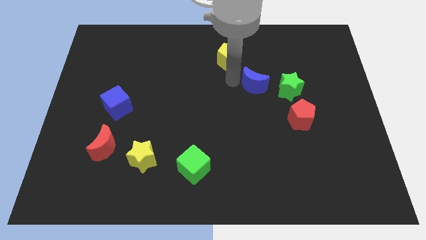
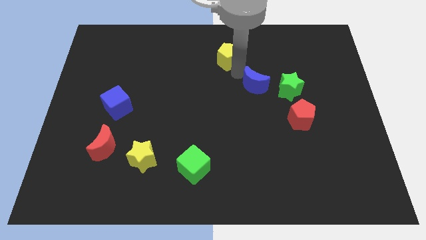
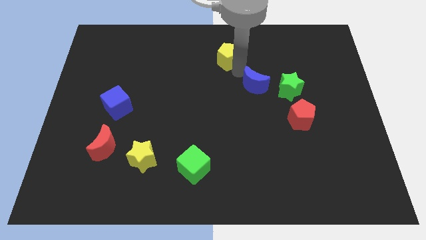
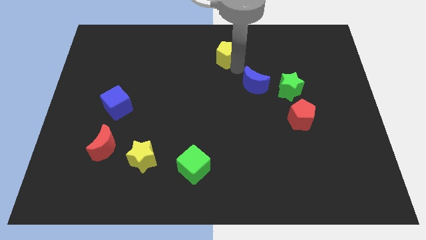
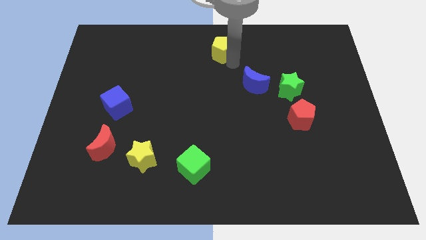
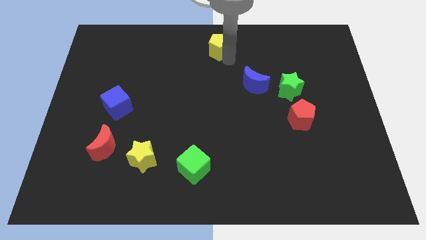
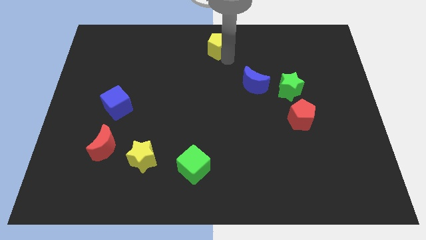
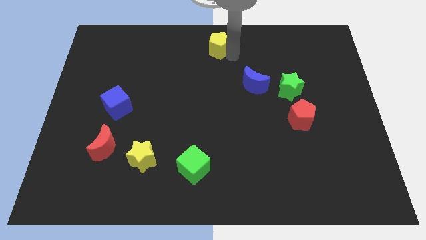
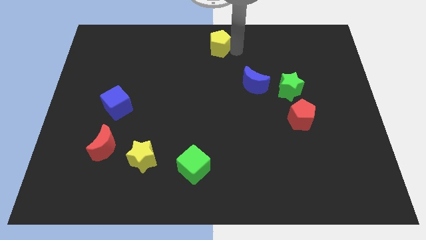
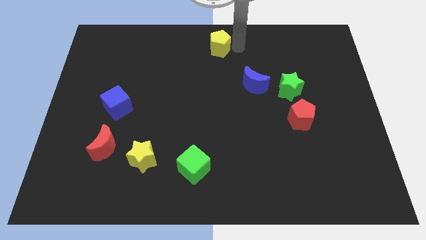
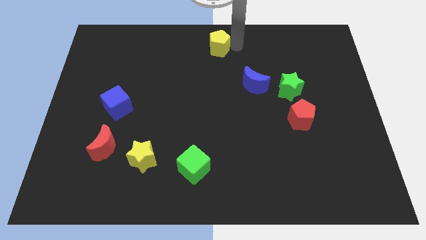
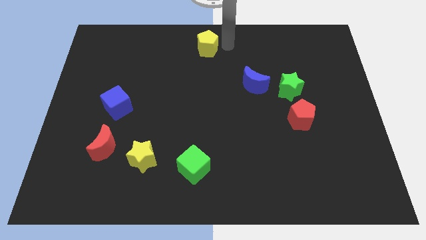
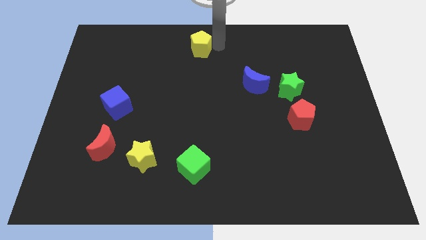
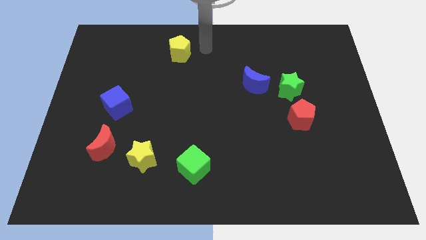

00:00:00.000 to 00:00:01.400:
move the yellow pentagon to the left of the board

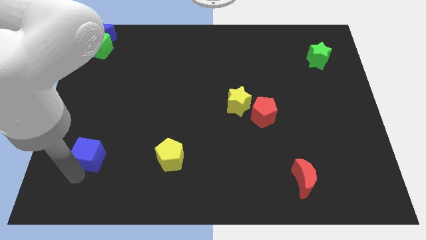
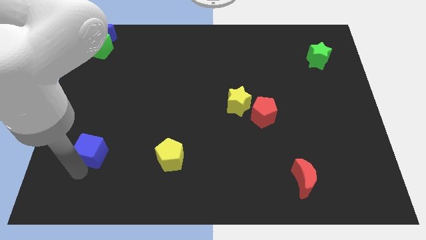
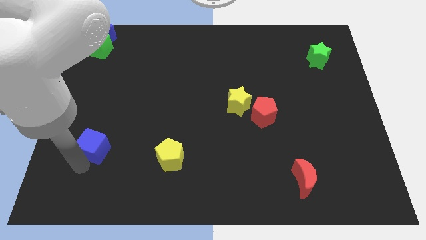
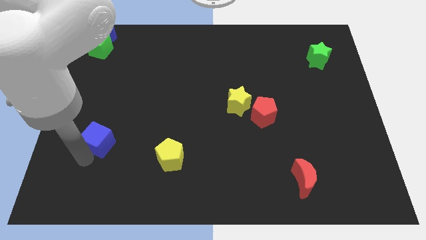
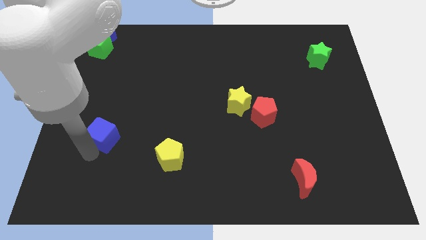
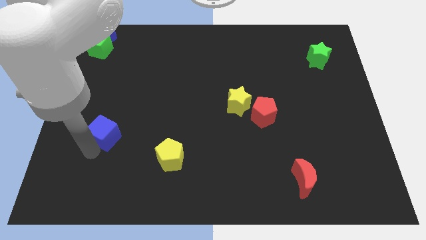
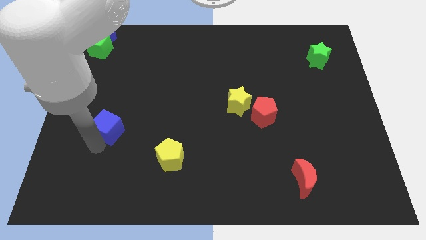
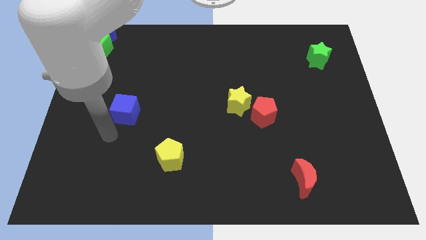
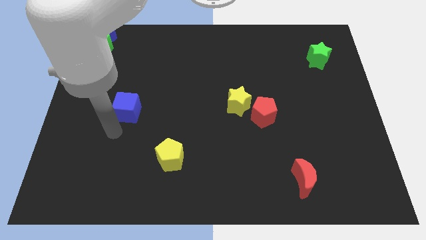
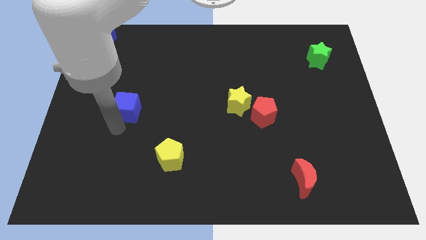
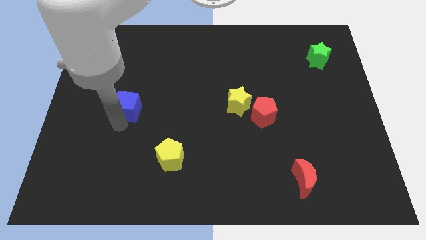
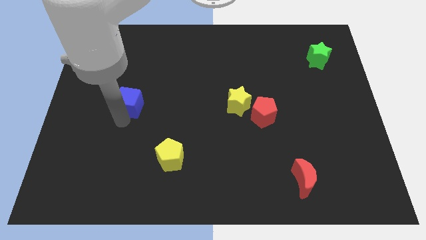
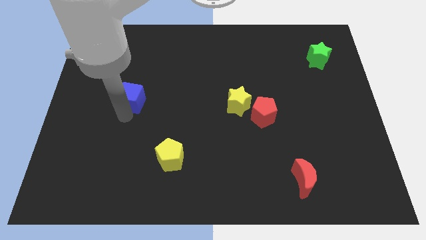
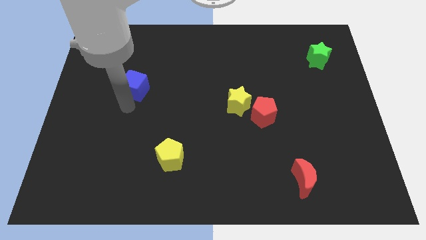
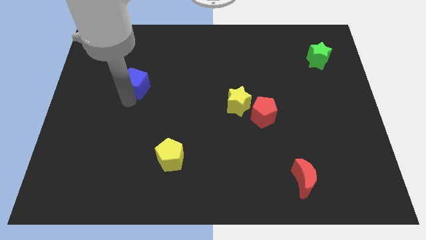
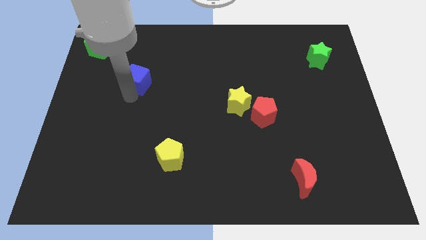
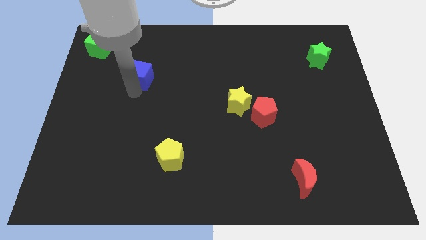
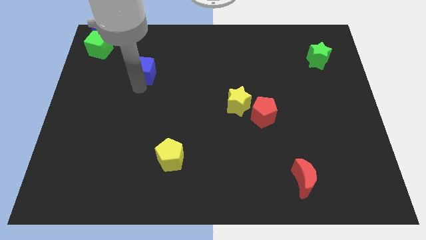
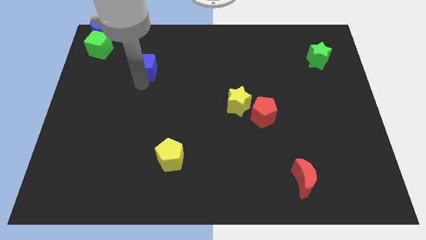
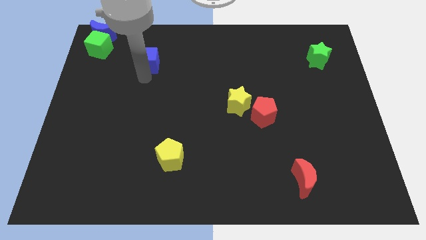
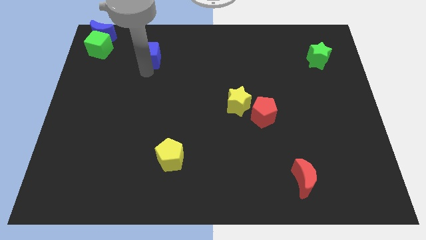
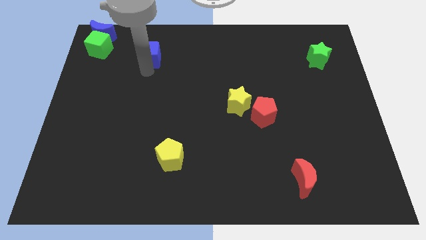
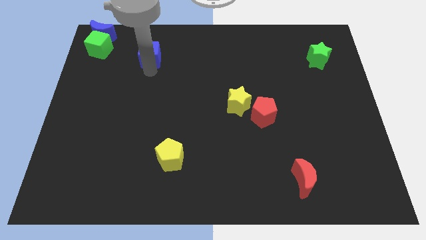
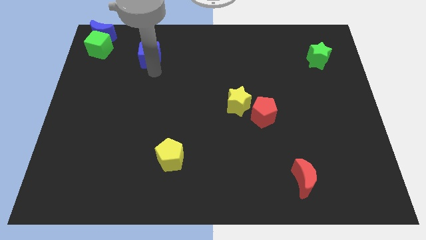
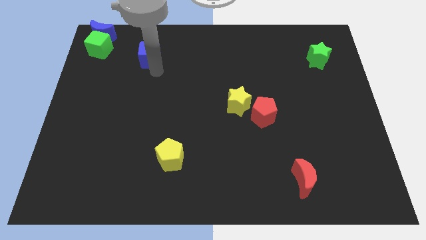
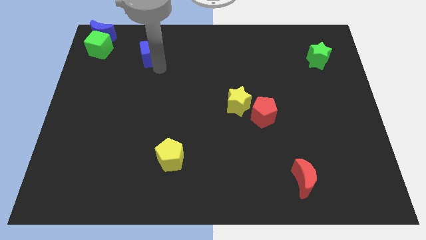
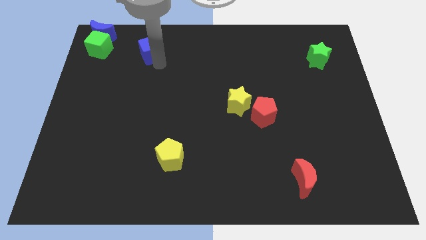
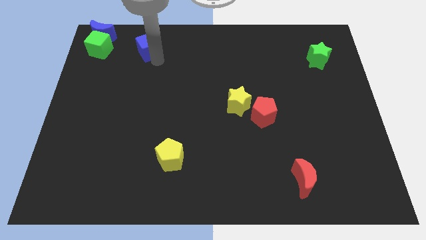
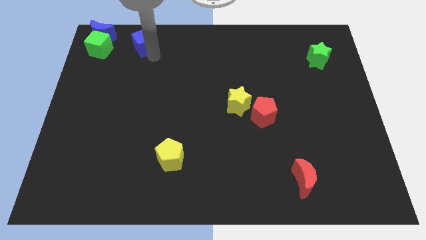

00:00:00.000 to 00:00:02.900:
place blue cube to the right of green cube

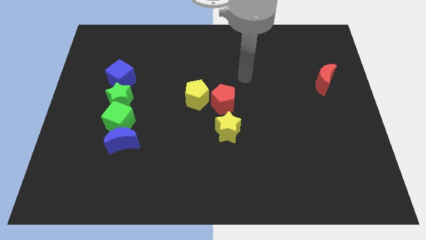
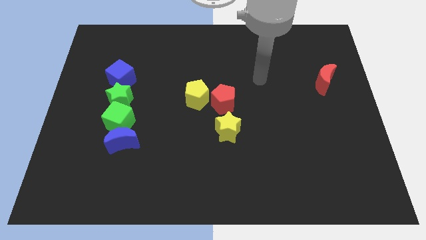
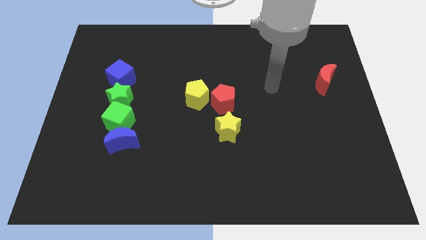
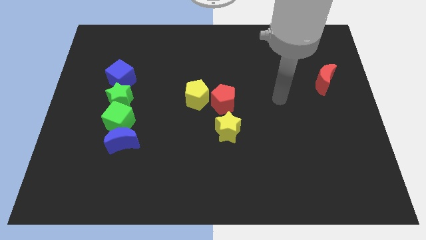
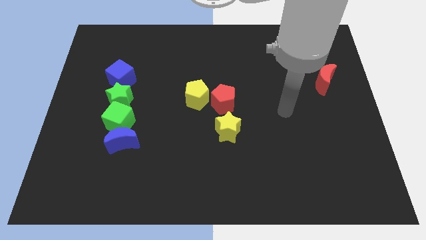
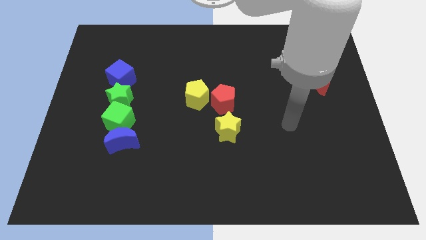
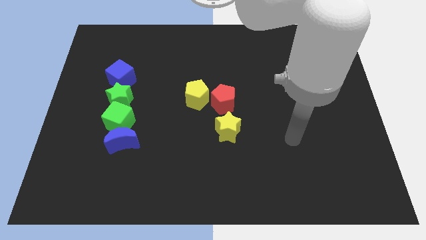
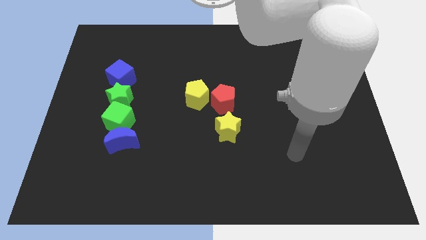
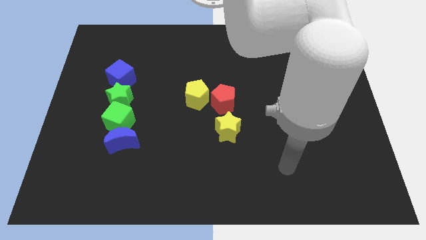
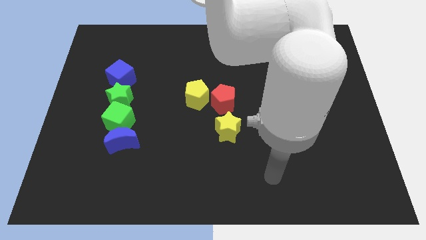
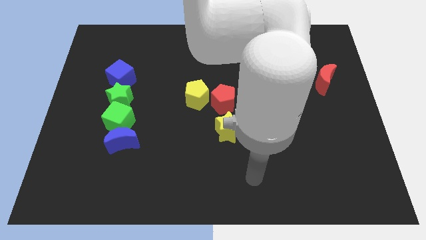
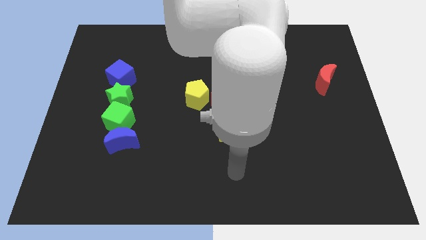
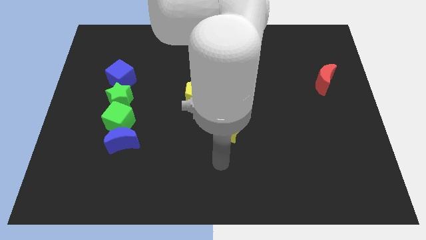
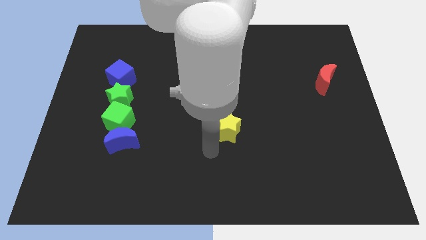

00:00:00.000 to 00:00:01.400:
move your arm below the yellow star

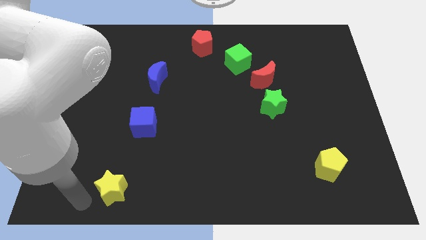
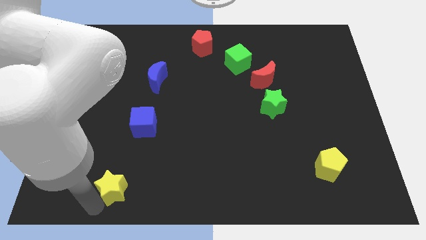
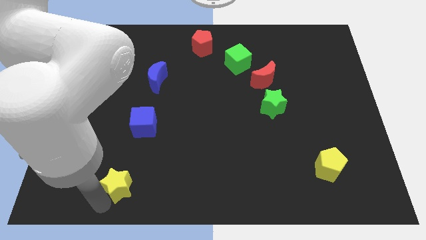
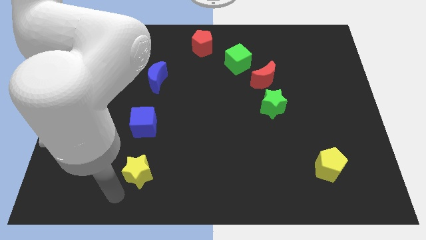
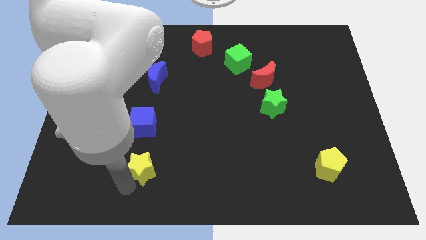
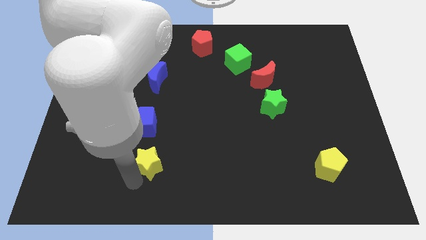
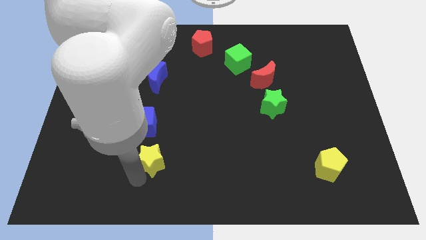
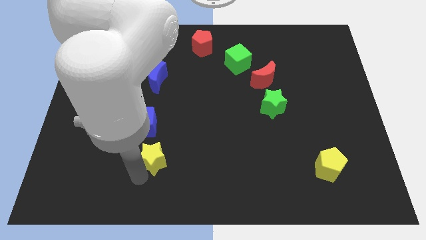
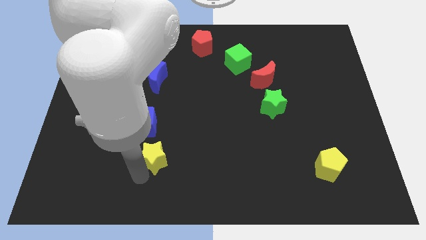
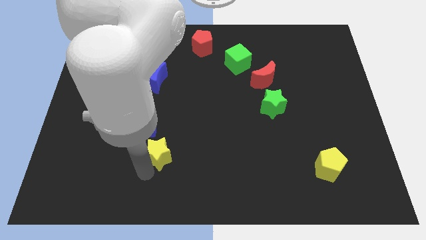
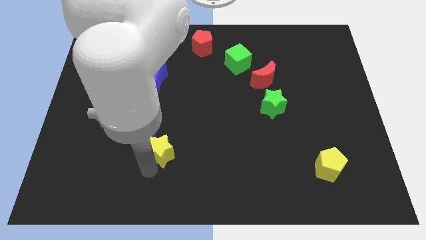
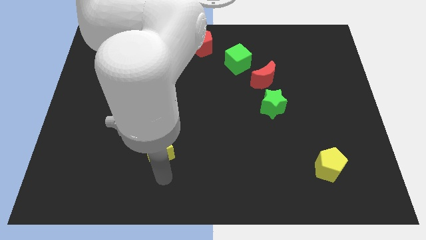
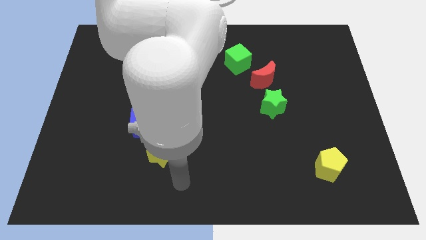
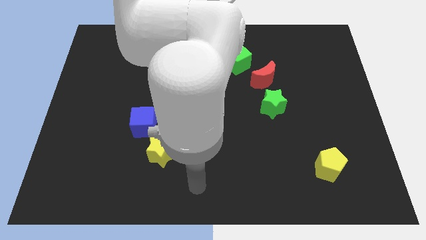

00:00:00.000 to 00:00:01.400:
place the yellow star diagonally bottom right to the blue cube

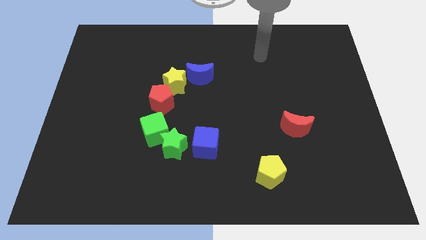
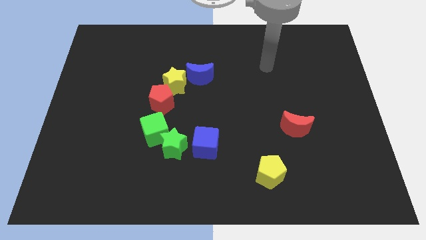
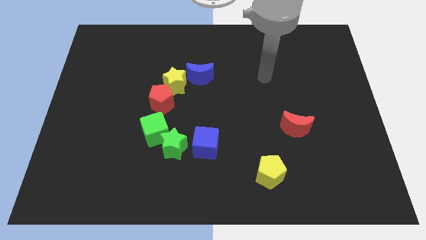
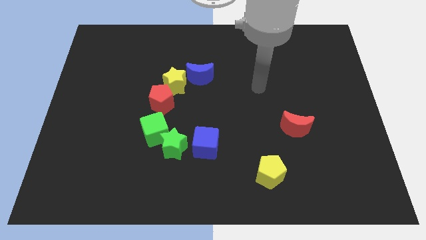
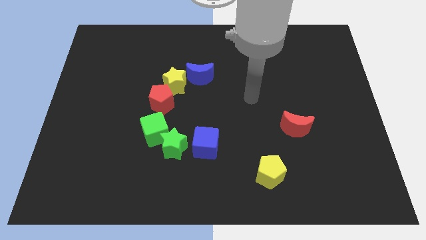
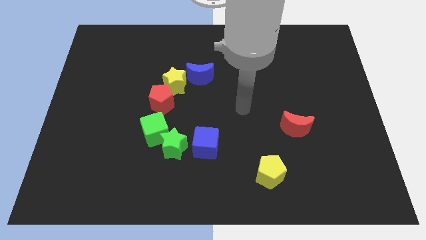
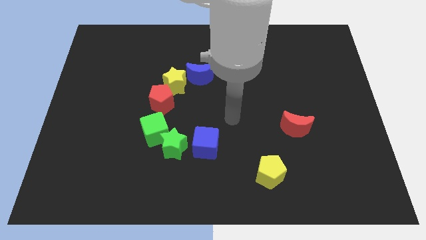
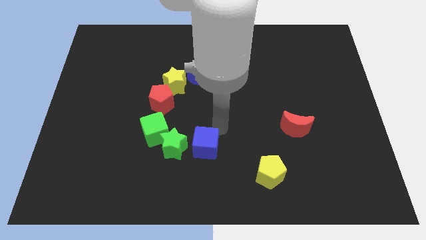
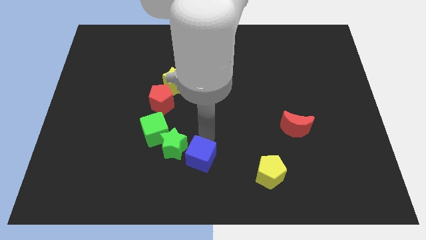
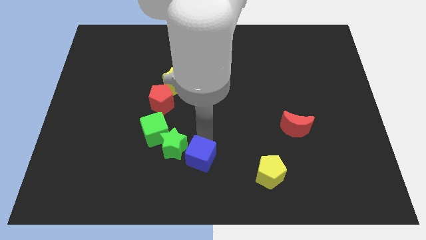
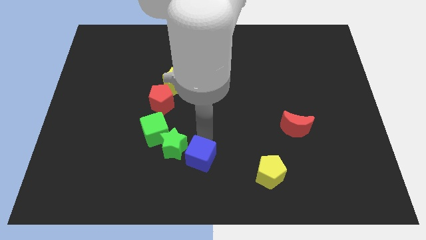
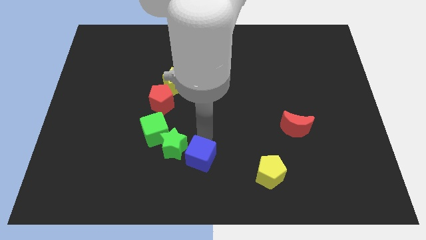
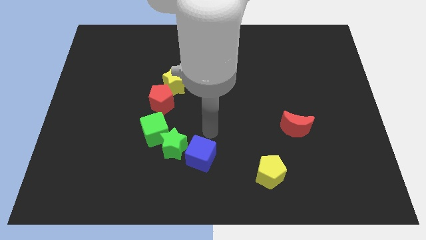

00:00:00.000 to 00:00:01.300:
push the blue cube slightly to the bottom

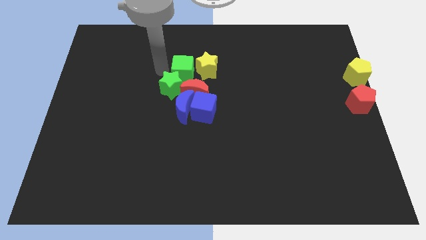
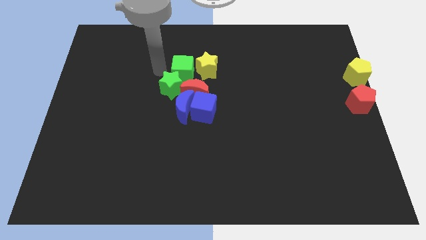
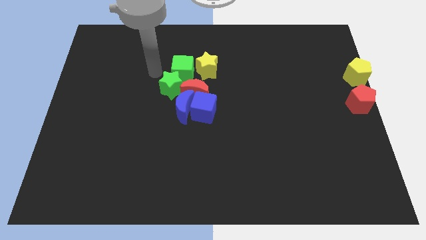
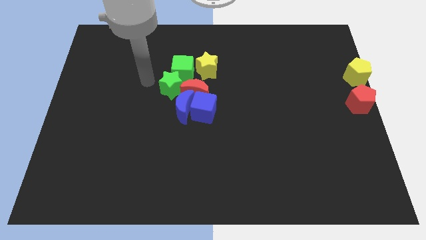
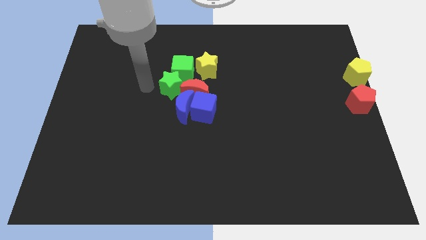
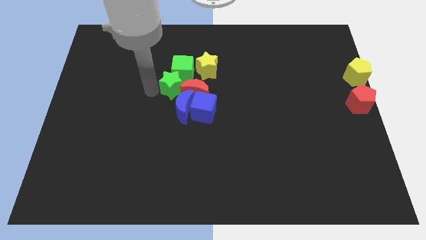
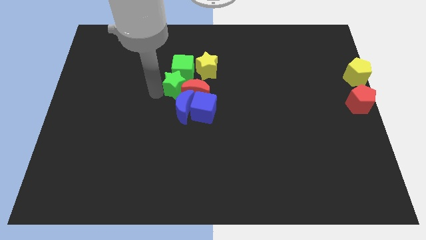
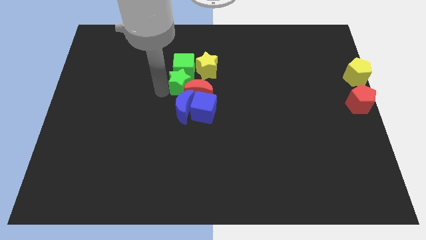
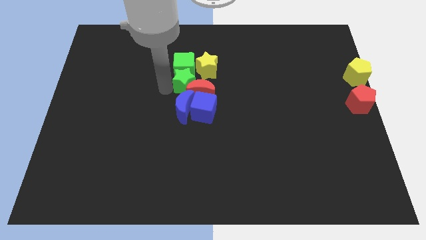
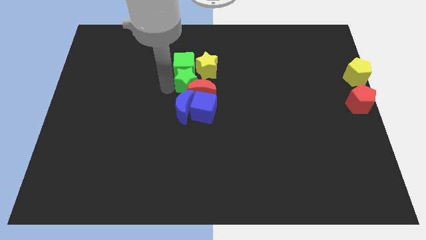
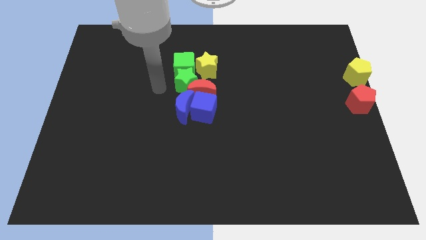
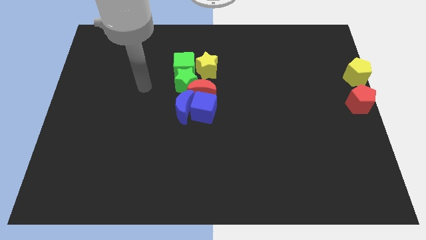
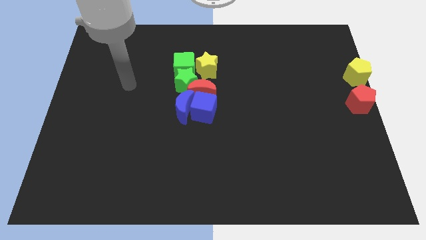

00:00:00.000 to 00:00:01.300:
make the green star to touch the red crescent
